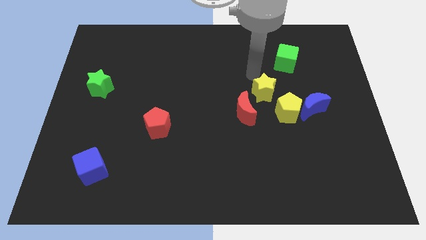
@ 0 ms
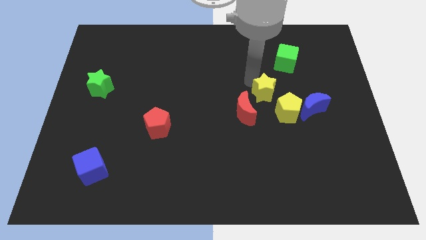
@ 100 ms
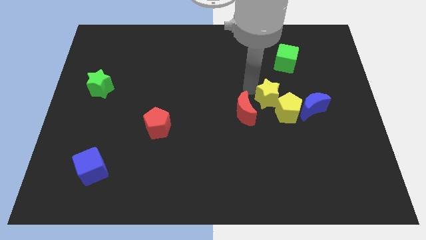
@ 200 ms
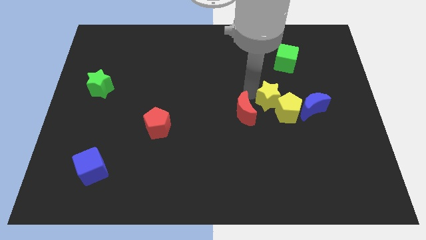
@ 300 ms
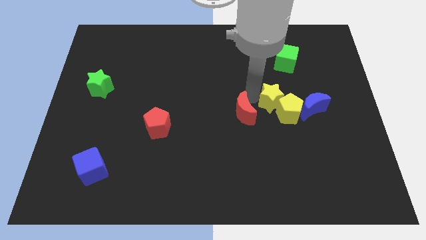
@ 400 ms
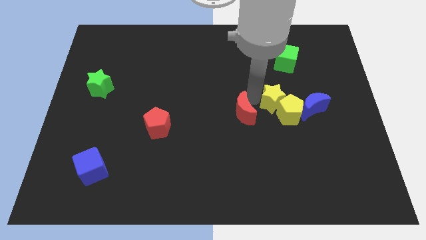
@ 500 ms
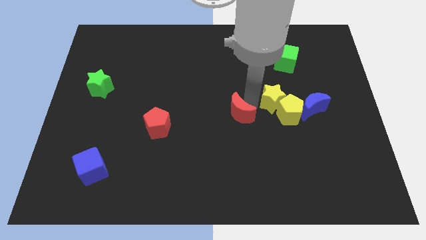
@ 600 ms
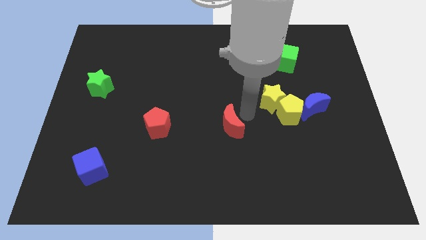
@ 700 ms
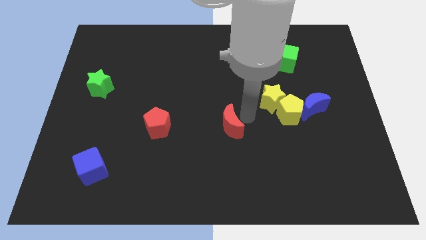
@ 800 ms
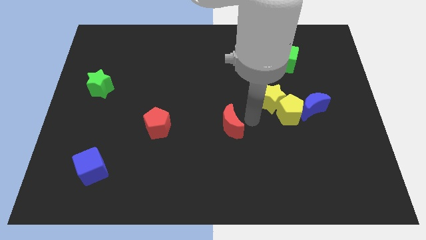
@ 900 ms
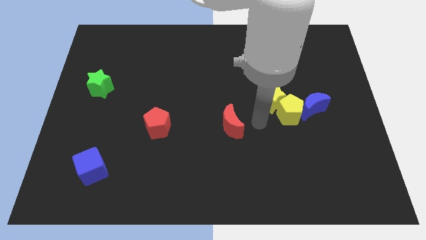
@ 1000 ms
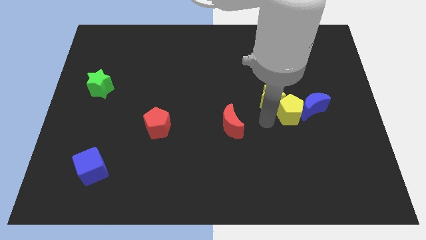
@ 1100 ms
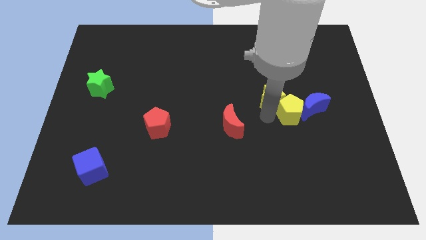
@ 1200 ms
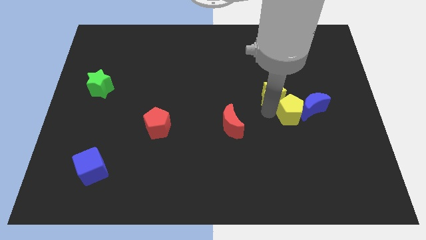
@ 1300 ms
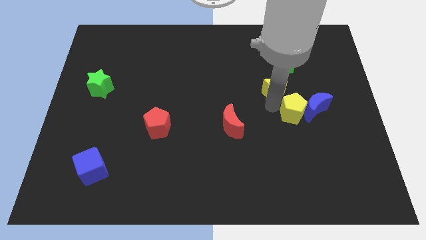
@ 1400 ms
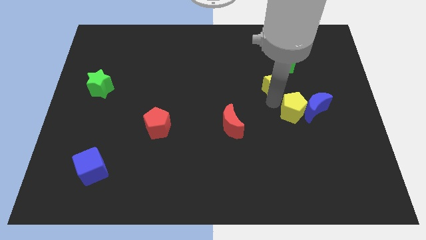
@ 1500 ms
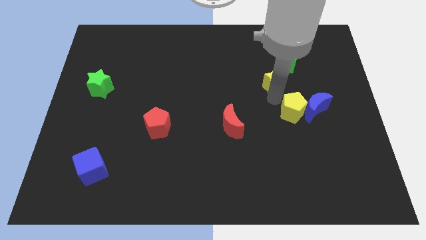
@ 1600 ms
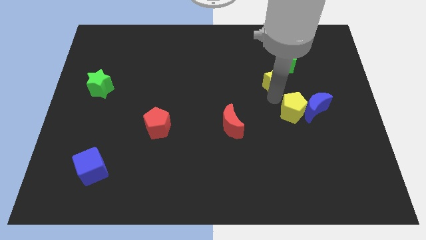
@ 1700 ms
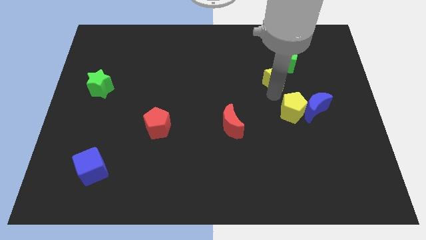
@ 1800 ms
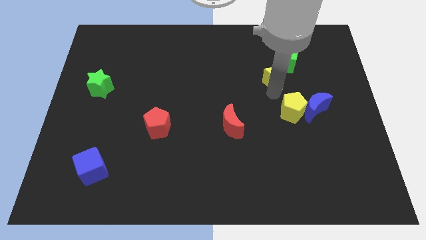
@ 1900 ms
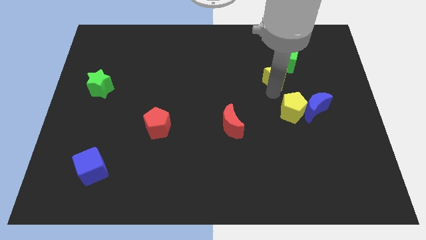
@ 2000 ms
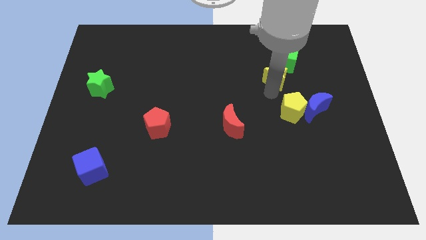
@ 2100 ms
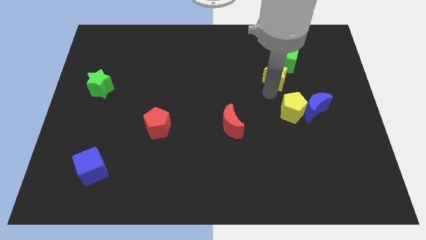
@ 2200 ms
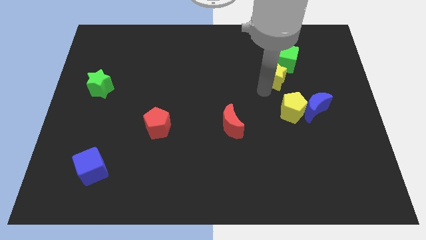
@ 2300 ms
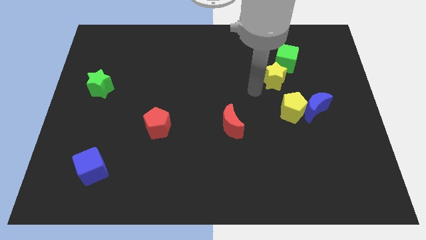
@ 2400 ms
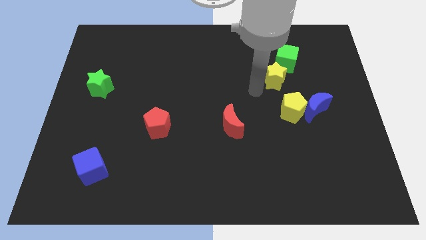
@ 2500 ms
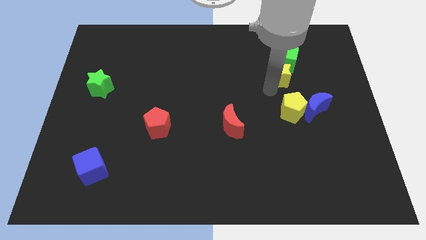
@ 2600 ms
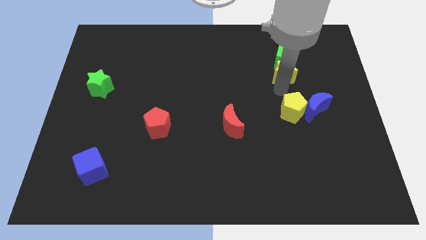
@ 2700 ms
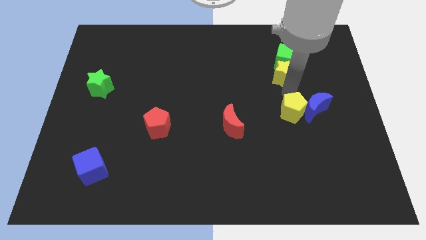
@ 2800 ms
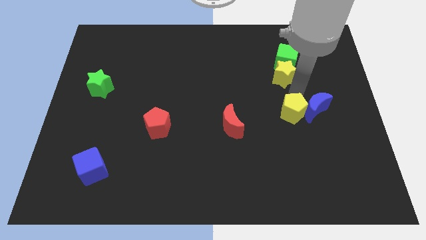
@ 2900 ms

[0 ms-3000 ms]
push the yellow star into the bottom side of the green cube

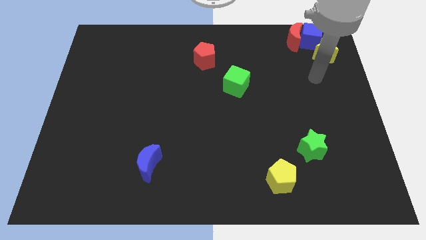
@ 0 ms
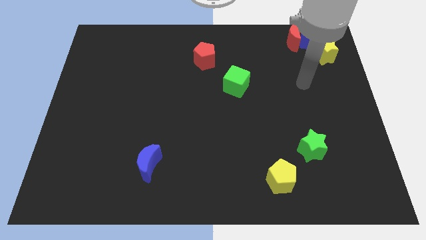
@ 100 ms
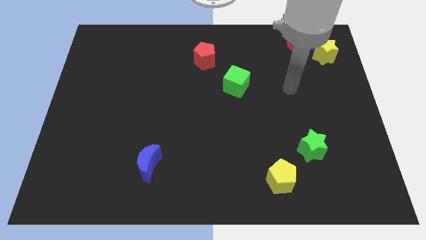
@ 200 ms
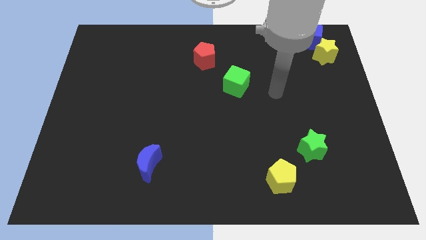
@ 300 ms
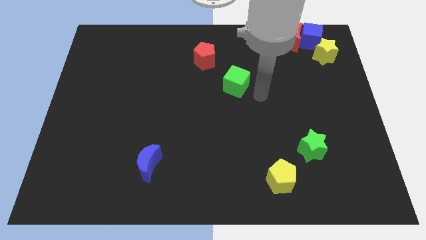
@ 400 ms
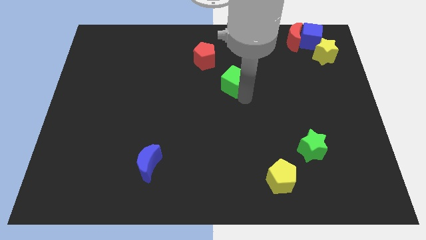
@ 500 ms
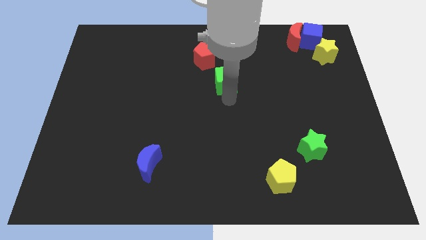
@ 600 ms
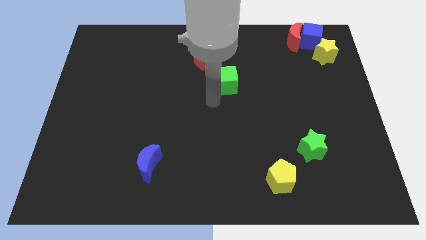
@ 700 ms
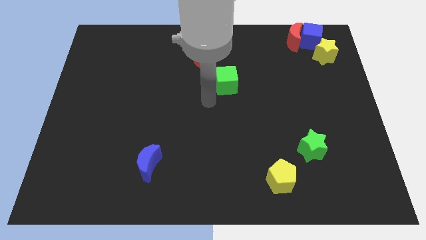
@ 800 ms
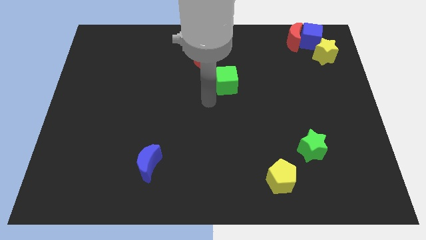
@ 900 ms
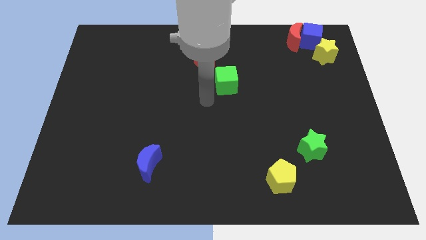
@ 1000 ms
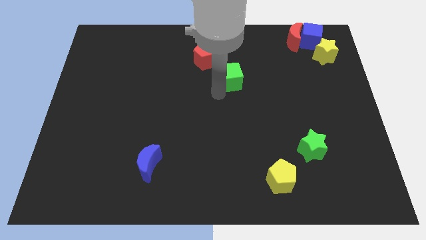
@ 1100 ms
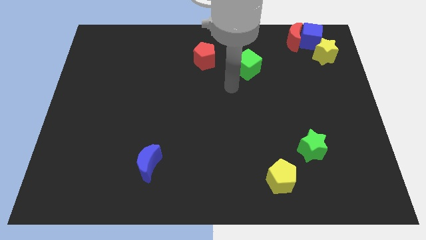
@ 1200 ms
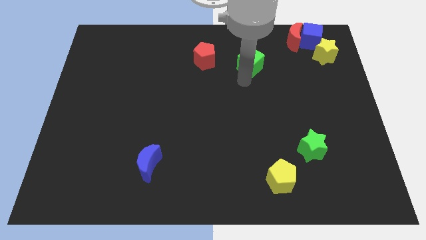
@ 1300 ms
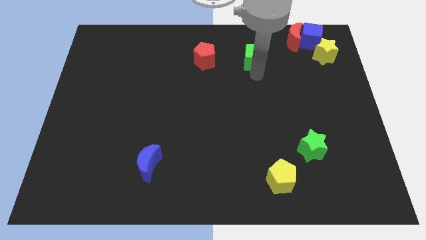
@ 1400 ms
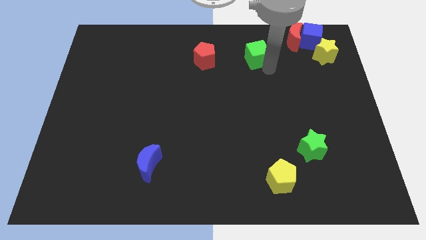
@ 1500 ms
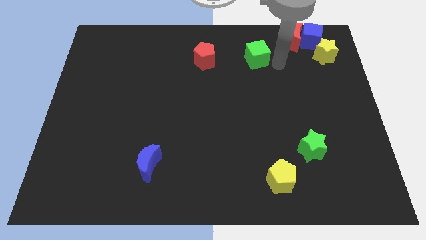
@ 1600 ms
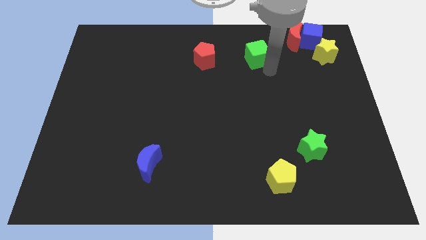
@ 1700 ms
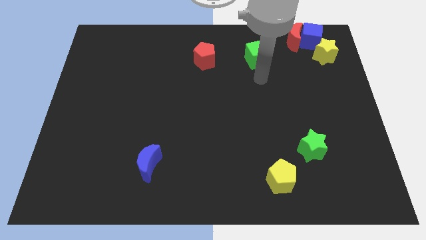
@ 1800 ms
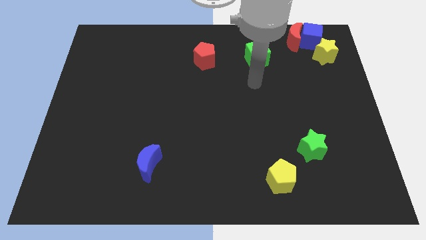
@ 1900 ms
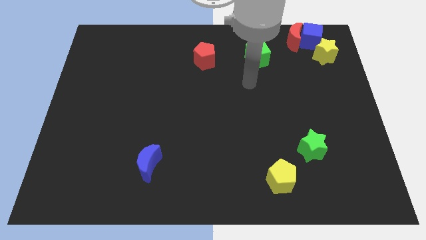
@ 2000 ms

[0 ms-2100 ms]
place the green cube horizontal to the red pentagon

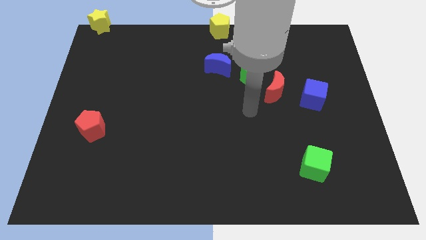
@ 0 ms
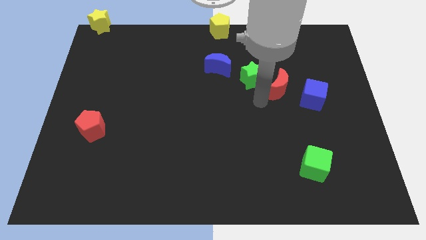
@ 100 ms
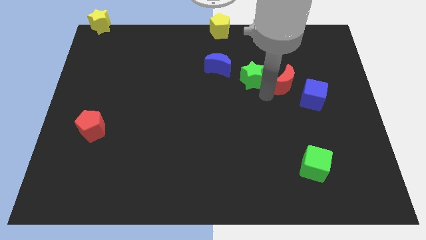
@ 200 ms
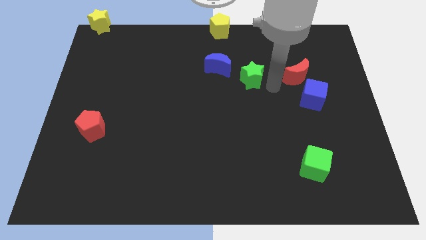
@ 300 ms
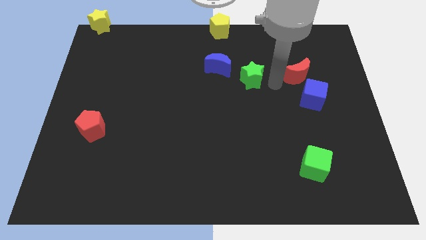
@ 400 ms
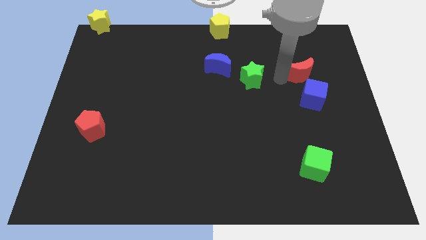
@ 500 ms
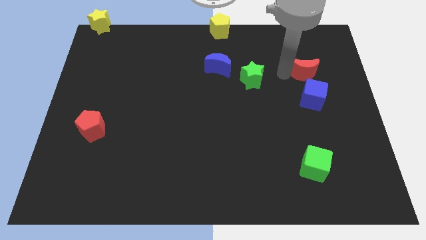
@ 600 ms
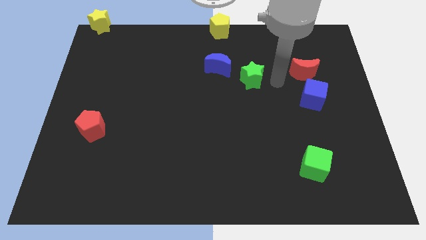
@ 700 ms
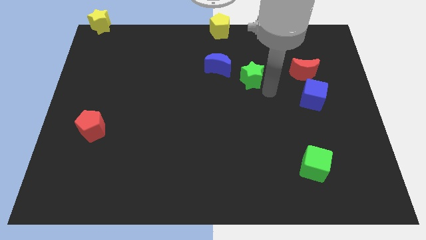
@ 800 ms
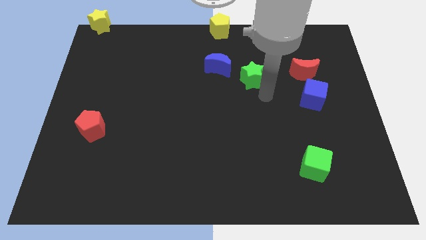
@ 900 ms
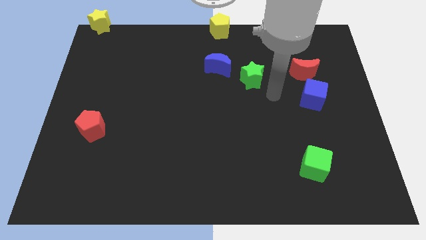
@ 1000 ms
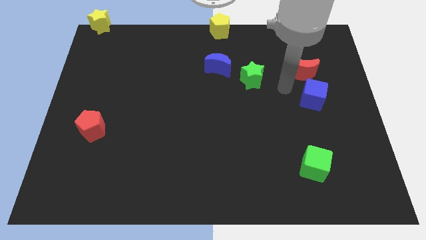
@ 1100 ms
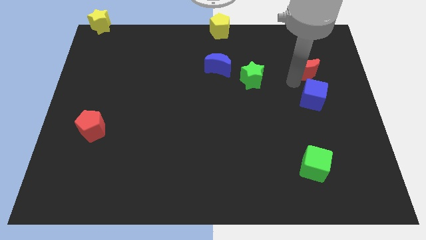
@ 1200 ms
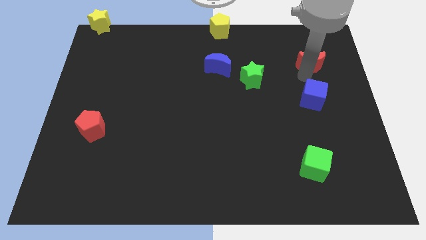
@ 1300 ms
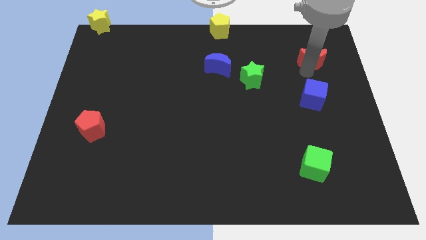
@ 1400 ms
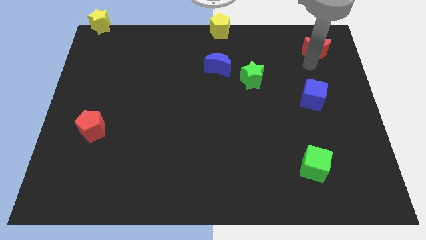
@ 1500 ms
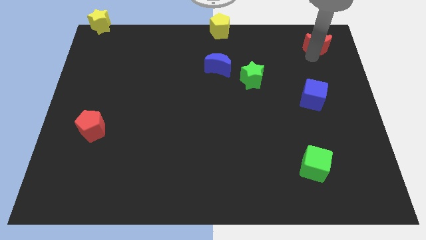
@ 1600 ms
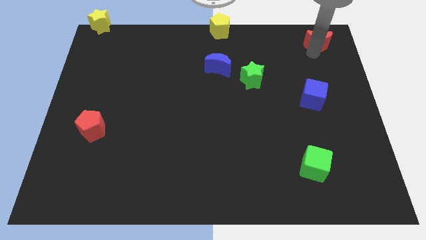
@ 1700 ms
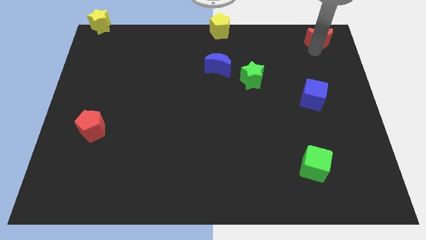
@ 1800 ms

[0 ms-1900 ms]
drag the red moon towards the top right corner of the board

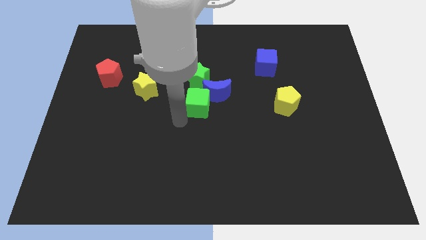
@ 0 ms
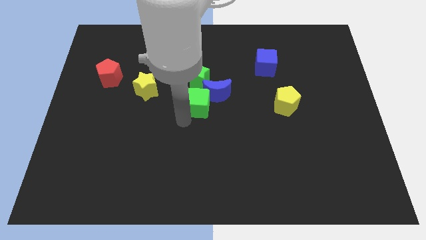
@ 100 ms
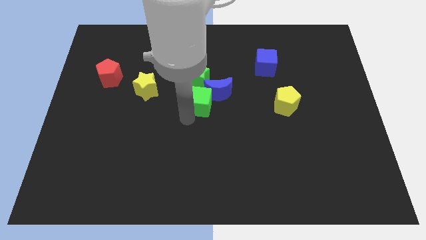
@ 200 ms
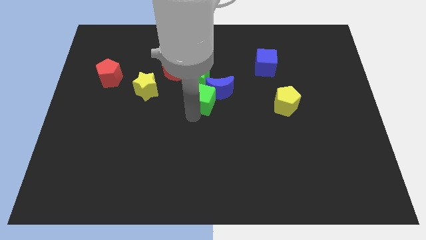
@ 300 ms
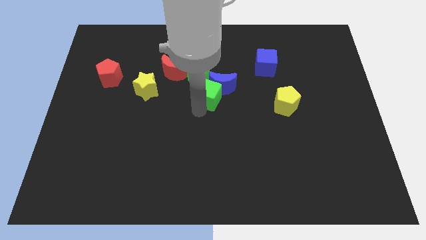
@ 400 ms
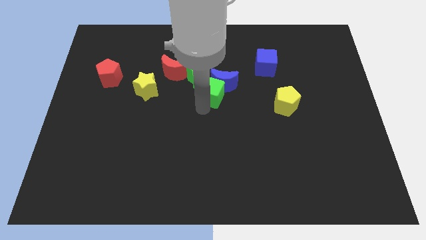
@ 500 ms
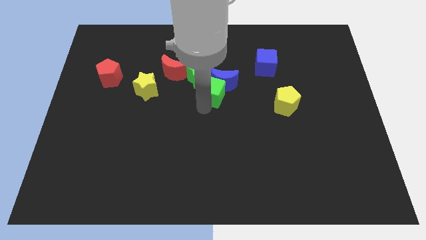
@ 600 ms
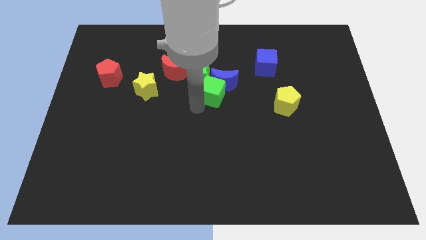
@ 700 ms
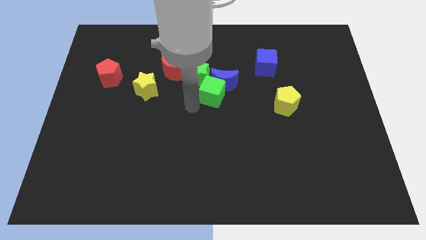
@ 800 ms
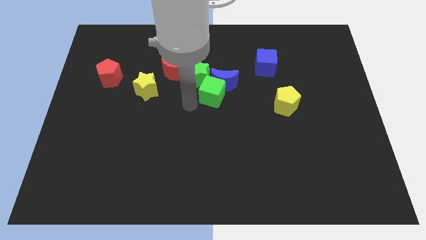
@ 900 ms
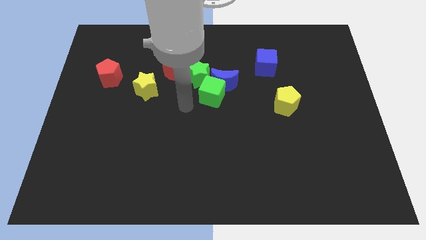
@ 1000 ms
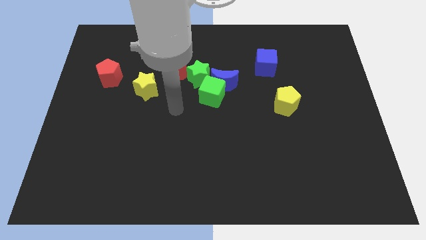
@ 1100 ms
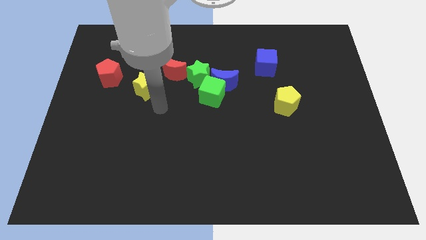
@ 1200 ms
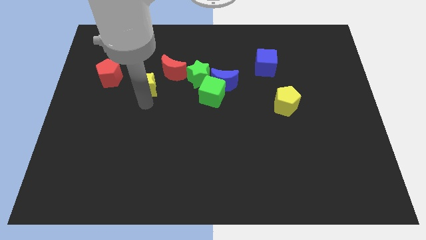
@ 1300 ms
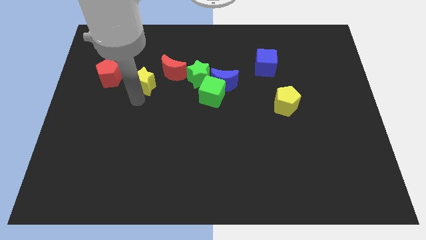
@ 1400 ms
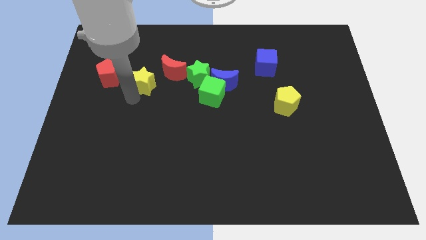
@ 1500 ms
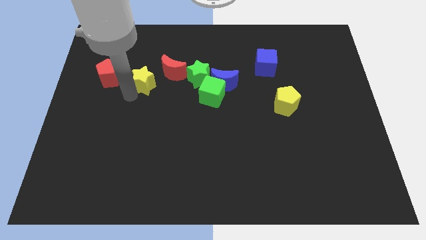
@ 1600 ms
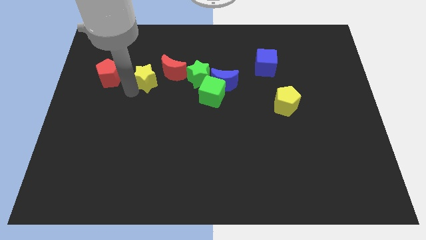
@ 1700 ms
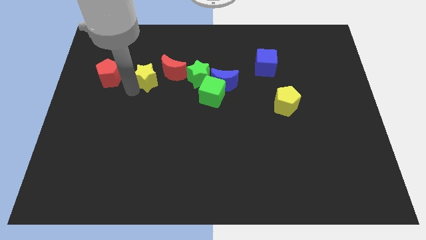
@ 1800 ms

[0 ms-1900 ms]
place the green cube to the right bottom of the green star
